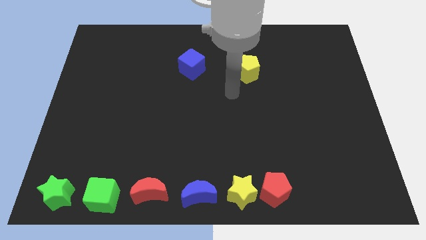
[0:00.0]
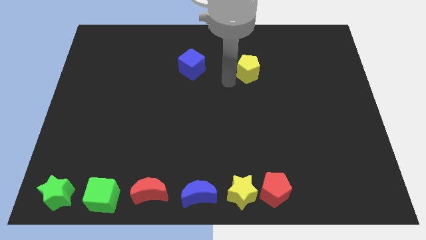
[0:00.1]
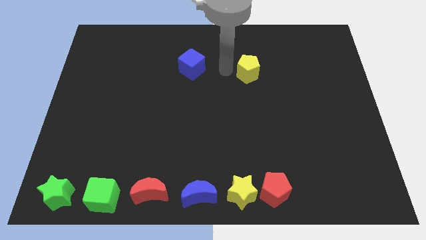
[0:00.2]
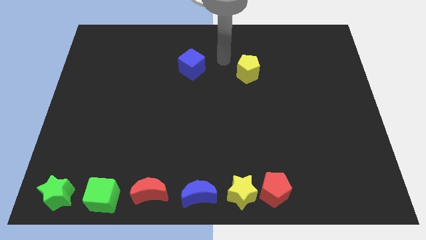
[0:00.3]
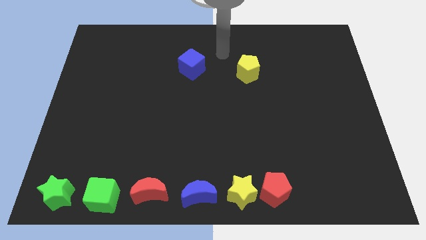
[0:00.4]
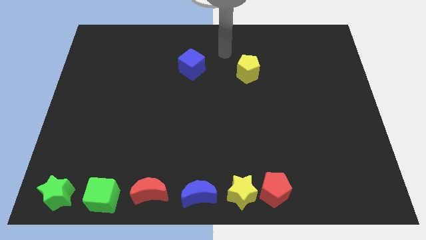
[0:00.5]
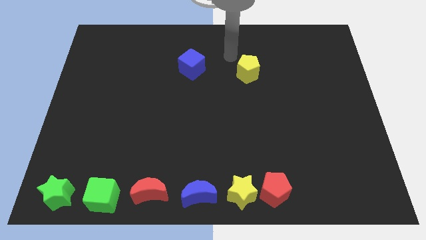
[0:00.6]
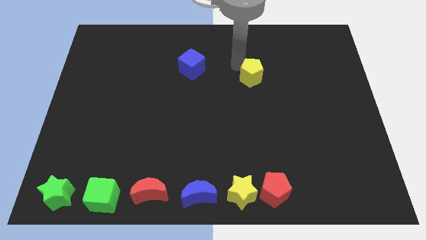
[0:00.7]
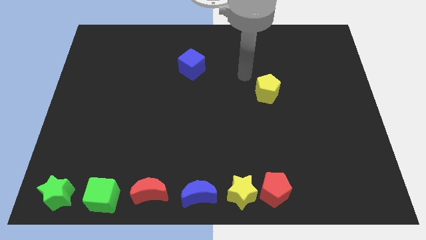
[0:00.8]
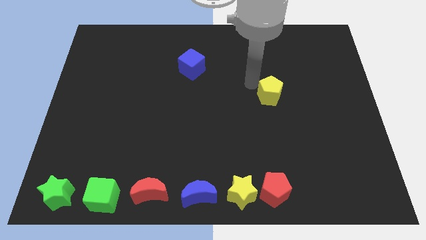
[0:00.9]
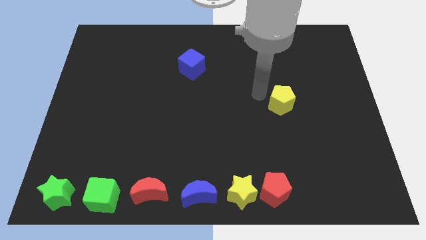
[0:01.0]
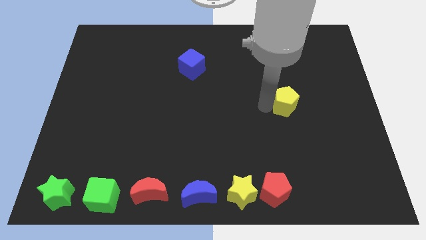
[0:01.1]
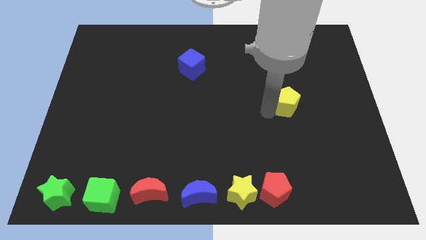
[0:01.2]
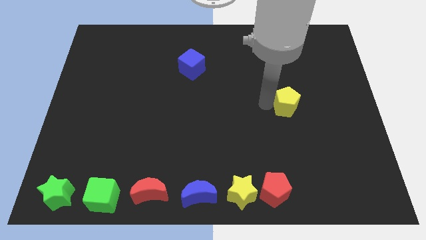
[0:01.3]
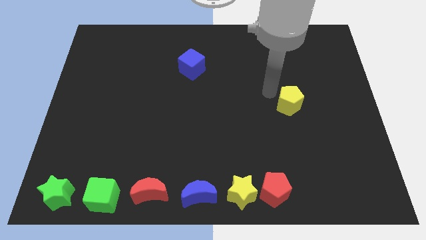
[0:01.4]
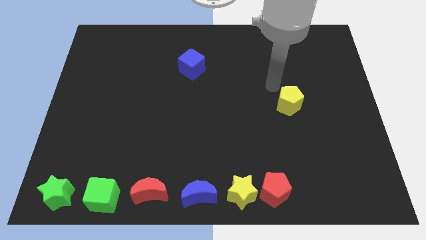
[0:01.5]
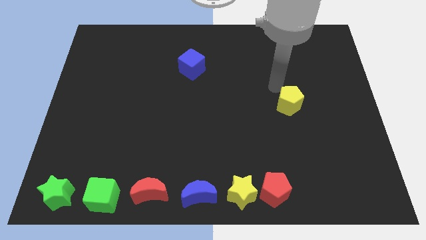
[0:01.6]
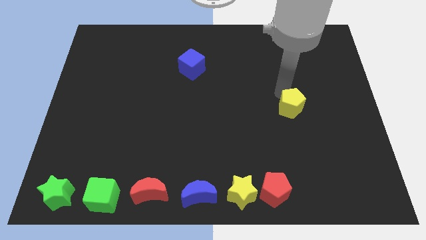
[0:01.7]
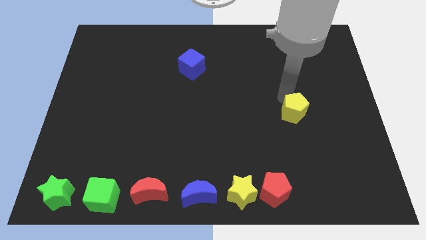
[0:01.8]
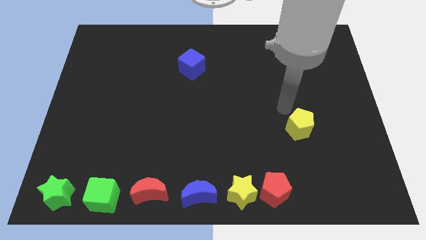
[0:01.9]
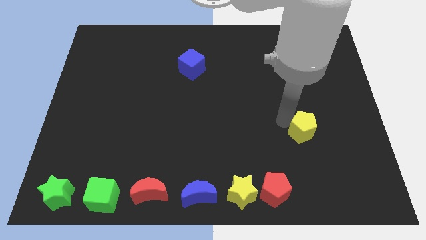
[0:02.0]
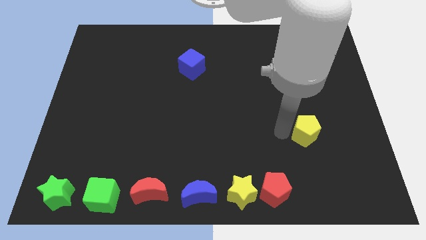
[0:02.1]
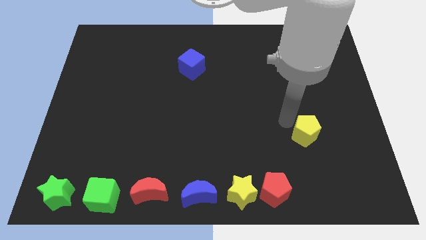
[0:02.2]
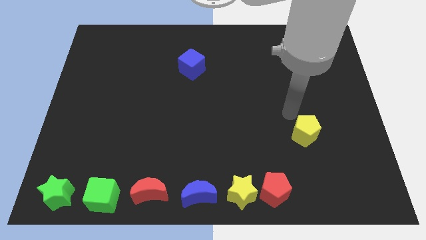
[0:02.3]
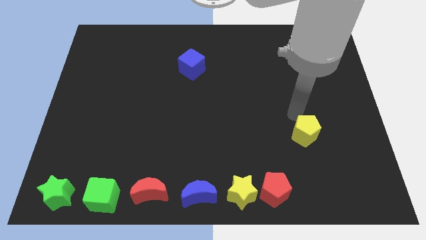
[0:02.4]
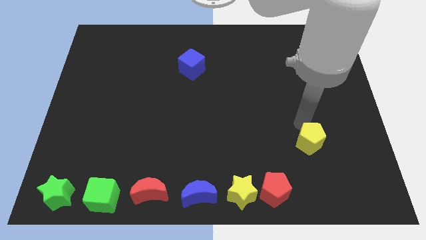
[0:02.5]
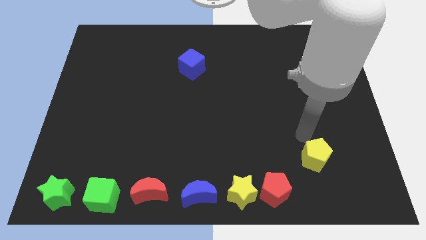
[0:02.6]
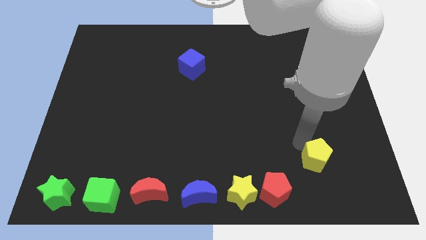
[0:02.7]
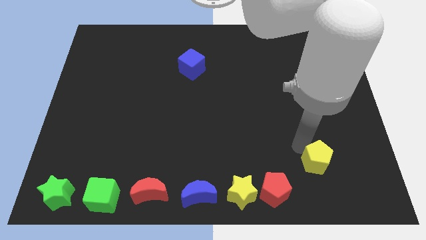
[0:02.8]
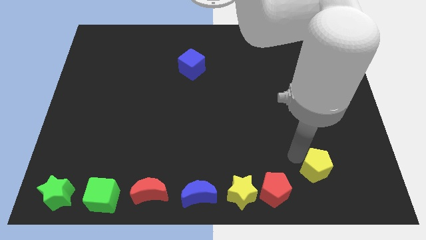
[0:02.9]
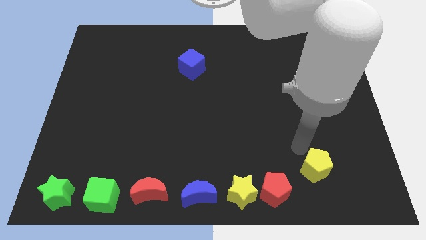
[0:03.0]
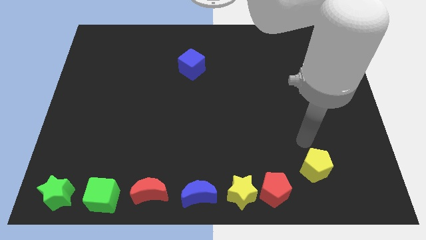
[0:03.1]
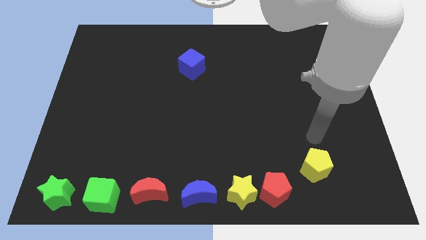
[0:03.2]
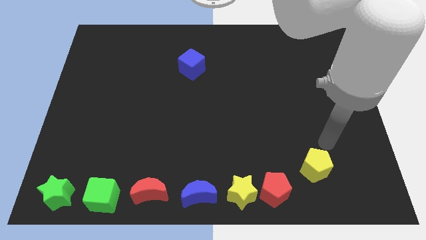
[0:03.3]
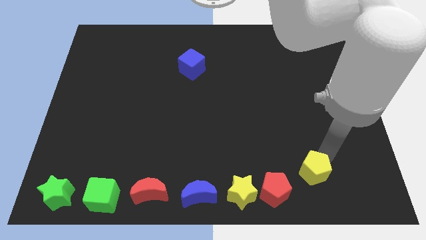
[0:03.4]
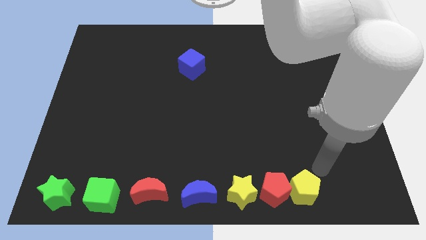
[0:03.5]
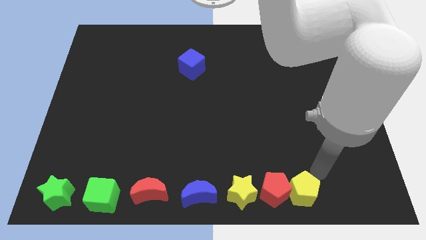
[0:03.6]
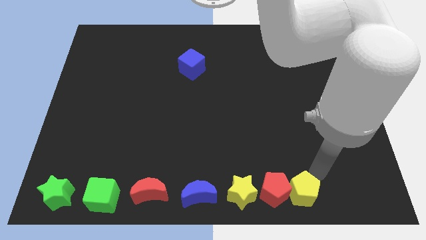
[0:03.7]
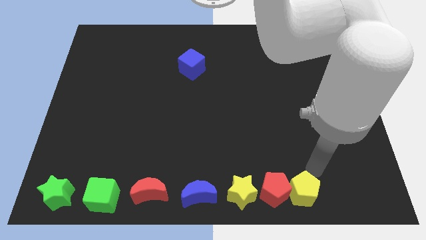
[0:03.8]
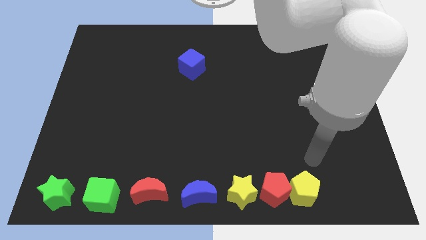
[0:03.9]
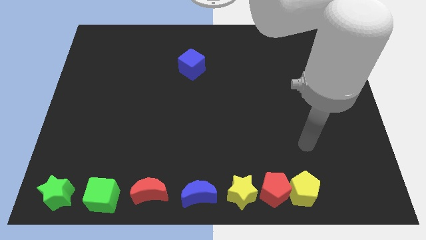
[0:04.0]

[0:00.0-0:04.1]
move the yellow pentagon into the right of the red pentagon

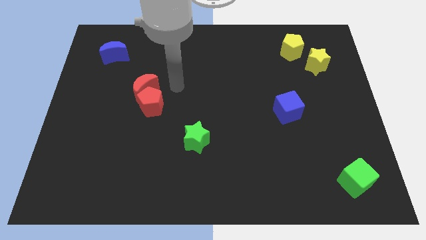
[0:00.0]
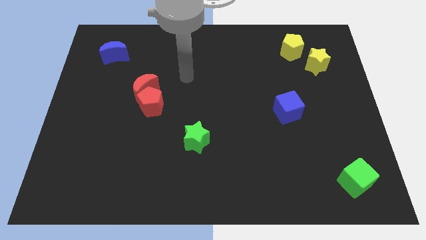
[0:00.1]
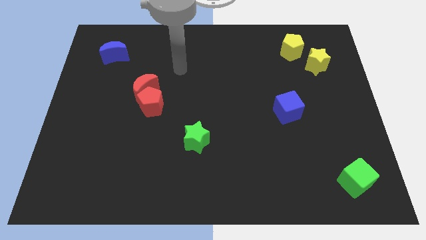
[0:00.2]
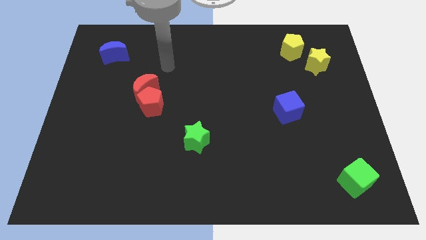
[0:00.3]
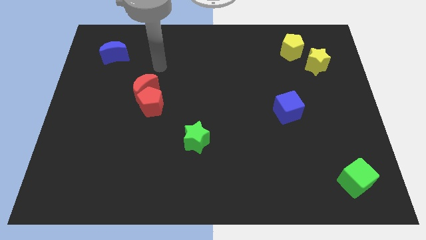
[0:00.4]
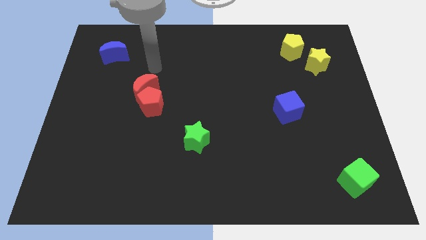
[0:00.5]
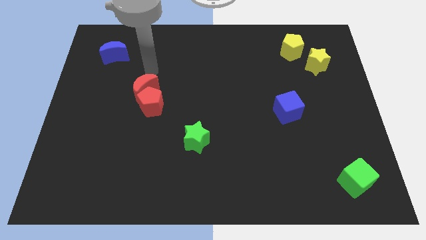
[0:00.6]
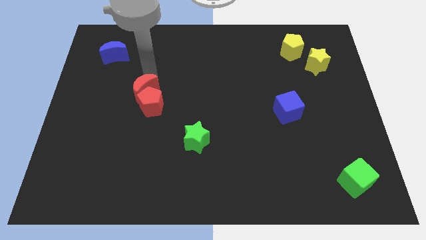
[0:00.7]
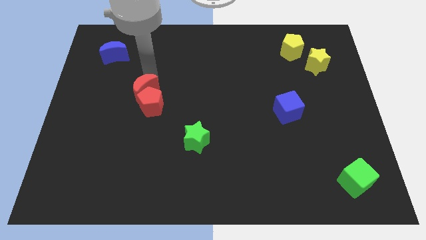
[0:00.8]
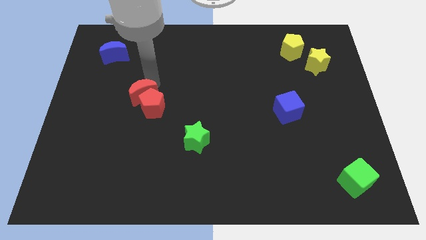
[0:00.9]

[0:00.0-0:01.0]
gently touch the group of red blocks

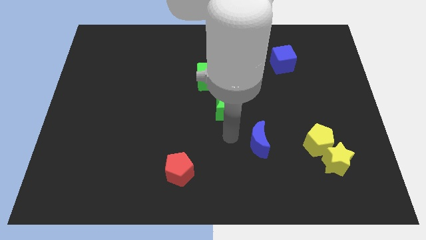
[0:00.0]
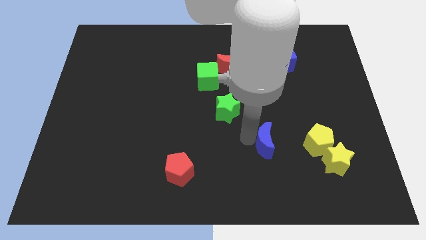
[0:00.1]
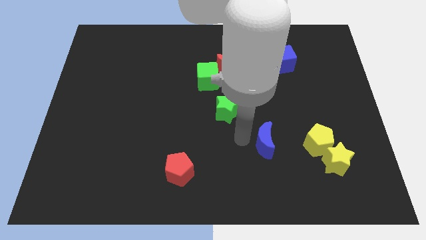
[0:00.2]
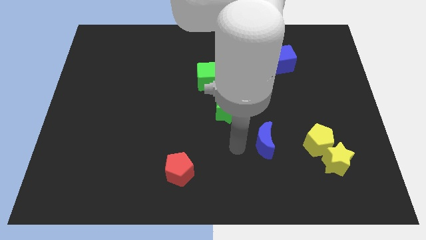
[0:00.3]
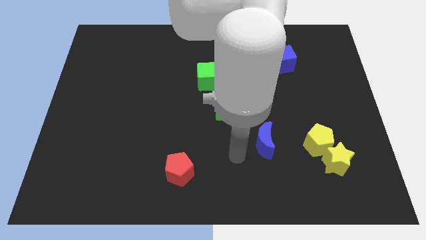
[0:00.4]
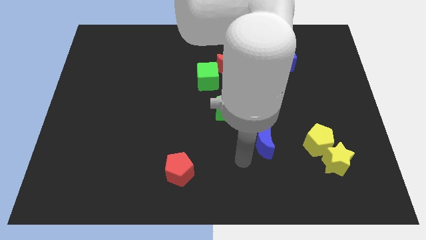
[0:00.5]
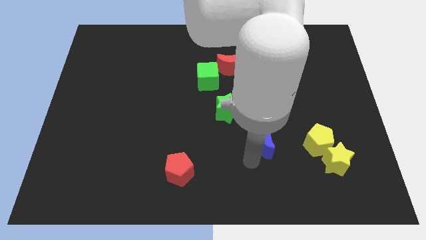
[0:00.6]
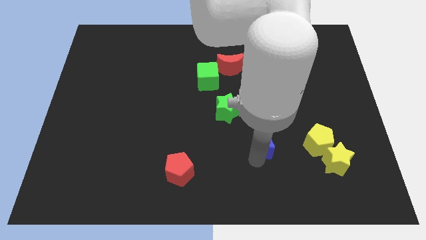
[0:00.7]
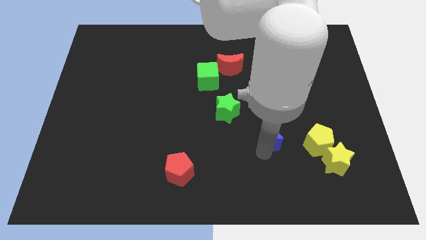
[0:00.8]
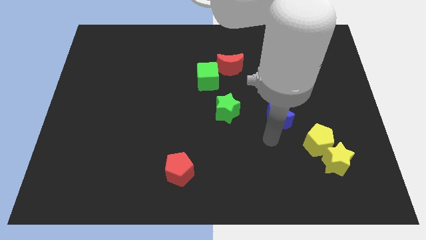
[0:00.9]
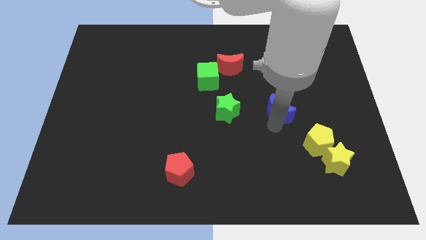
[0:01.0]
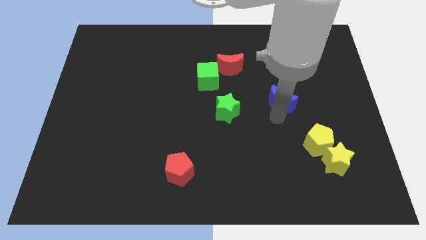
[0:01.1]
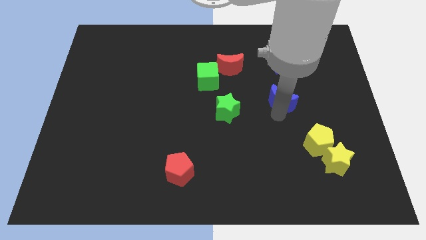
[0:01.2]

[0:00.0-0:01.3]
push the blue moon in diagonal manner to the top side of the board

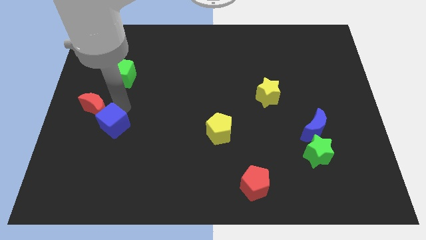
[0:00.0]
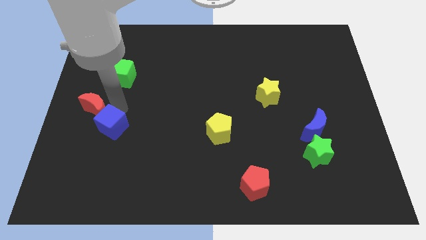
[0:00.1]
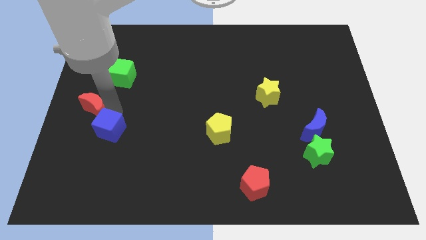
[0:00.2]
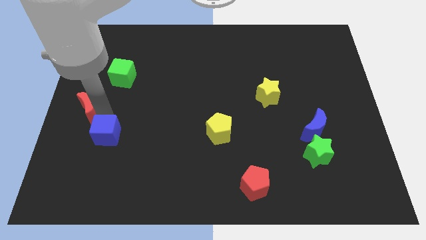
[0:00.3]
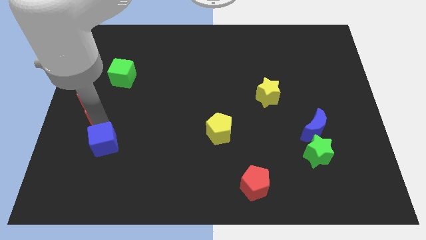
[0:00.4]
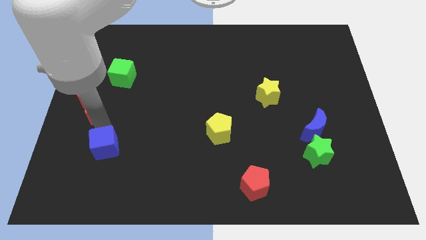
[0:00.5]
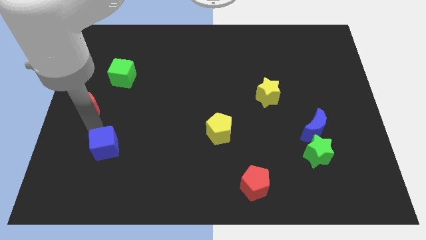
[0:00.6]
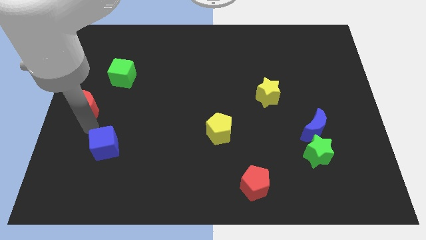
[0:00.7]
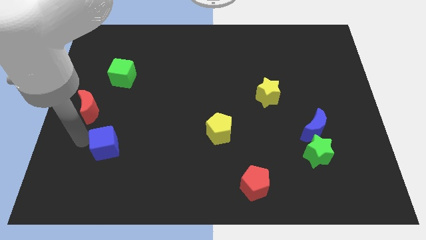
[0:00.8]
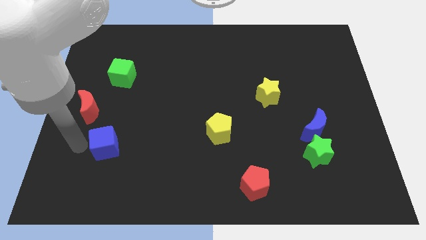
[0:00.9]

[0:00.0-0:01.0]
place the blue cube left to the yellow pentagon

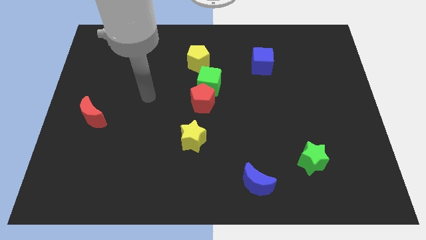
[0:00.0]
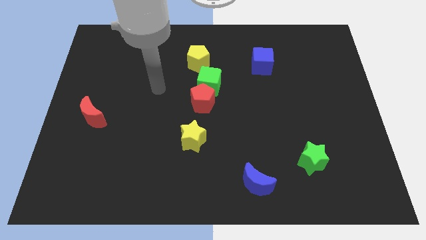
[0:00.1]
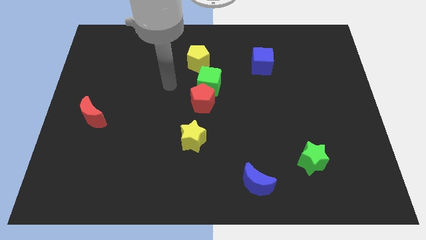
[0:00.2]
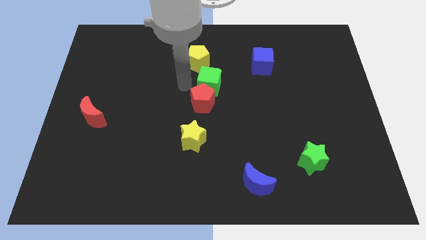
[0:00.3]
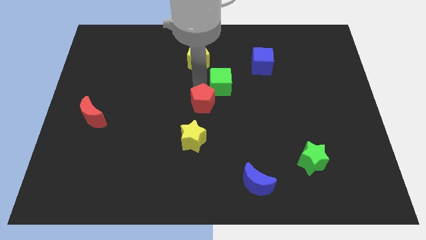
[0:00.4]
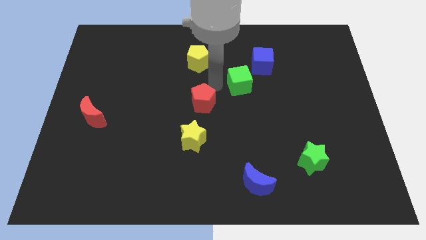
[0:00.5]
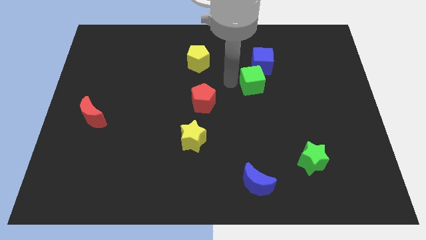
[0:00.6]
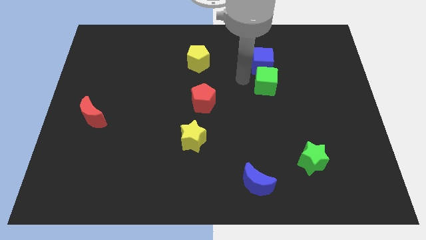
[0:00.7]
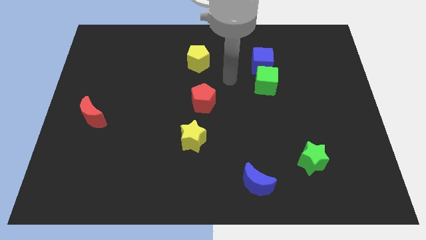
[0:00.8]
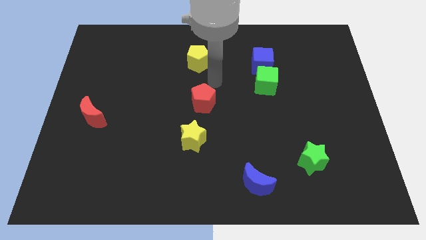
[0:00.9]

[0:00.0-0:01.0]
push the green cube to the bottom side of the blue cube

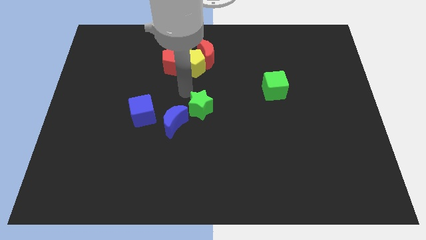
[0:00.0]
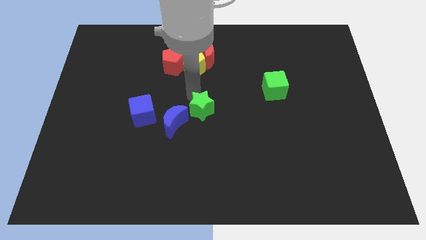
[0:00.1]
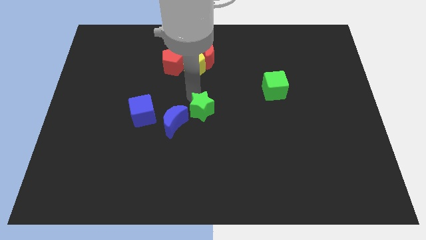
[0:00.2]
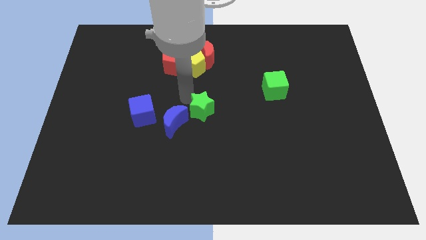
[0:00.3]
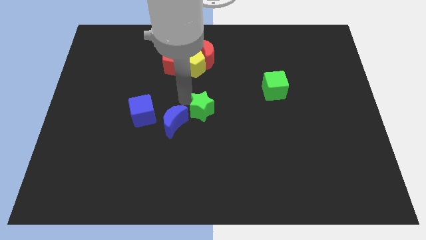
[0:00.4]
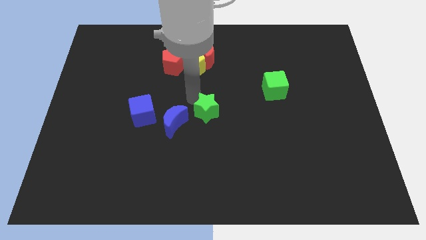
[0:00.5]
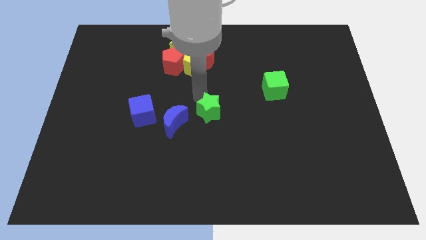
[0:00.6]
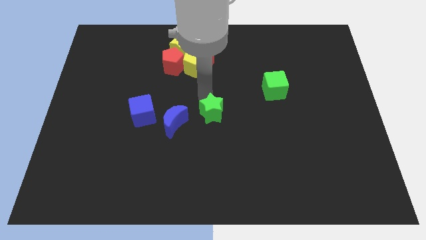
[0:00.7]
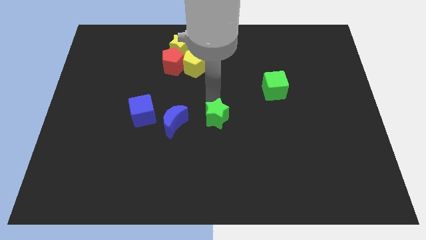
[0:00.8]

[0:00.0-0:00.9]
move the green star to the center of the board
